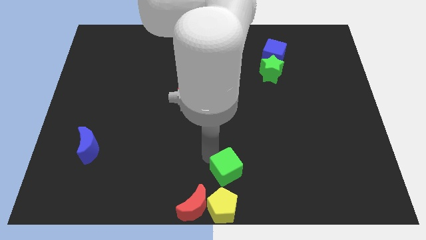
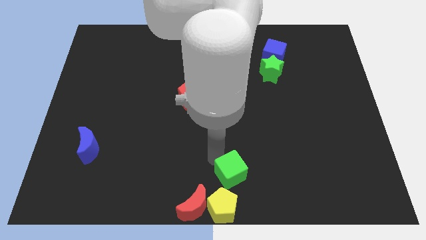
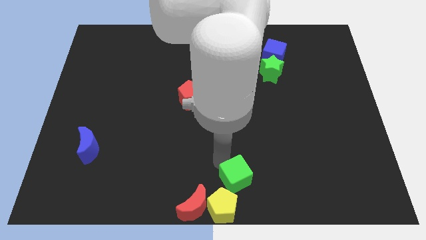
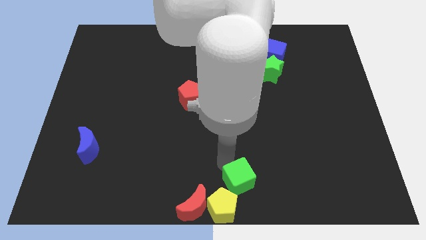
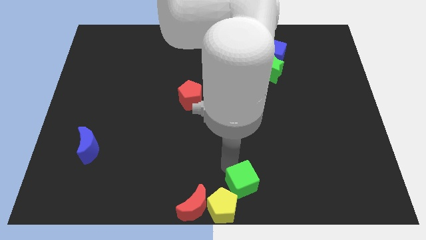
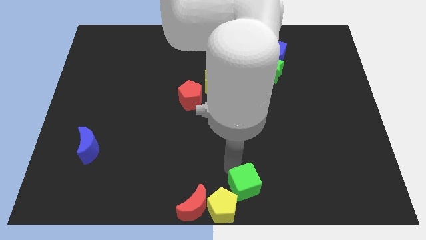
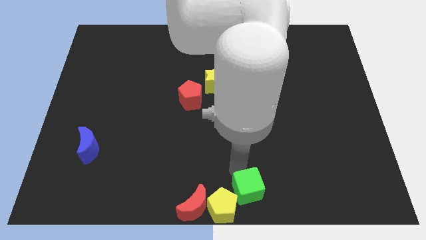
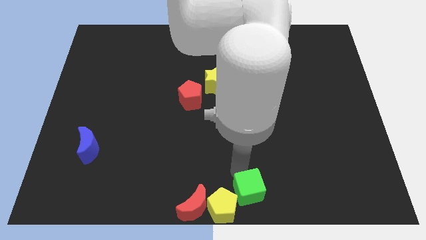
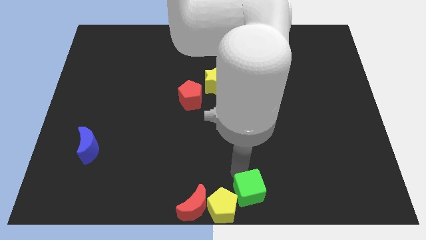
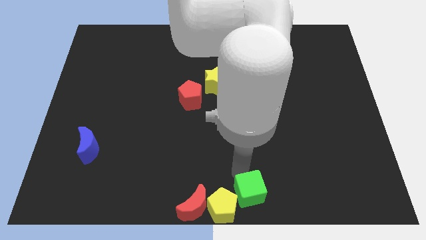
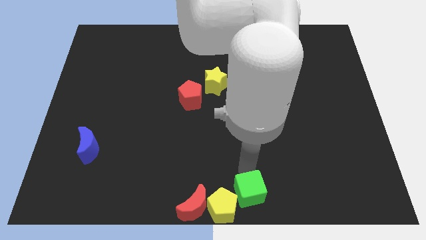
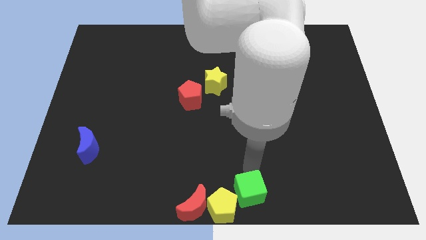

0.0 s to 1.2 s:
place the green cube diagonally top right to the yellow pentagon

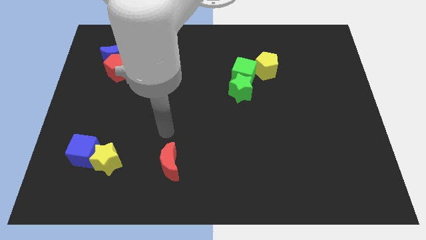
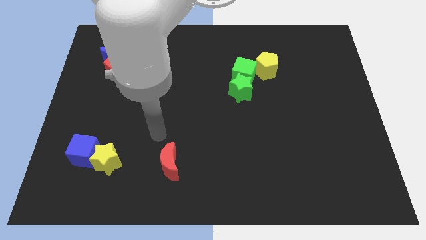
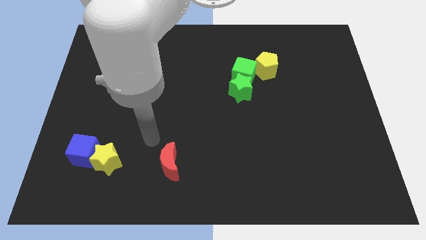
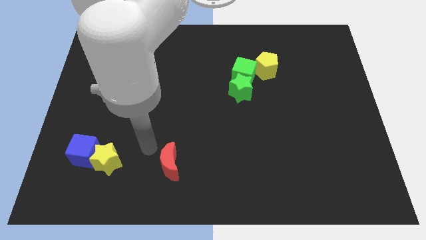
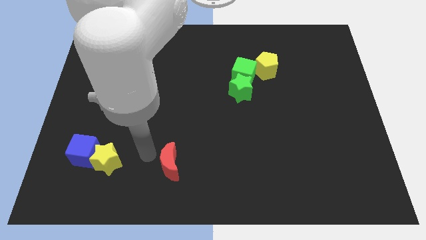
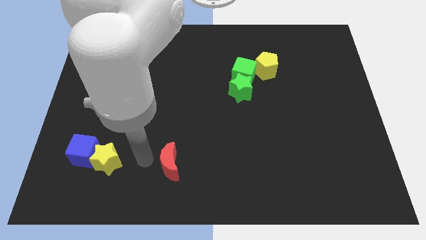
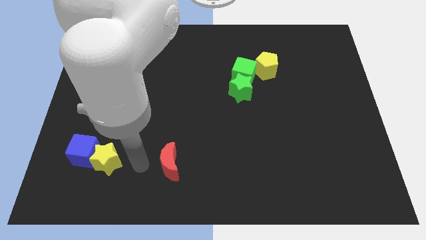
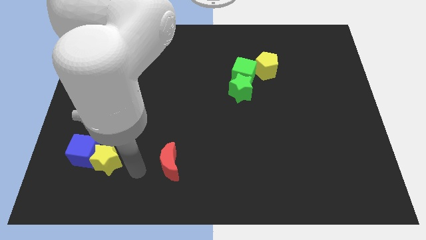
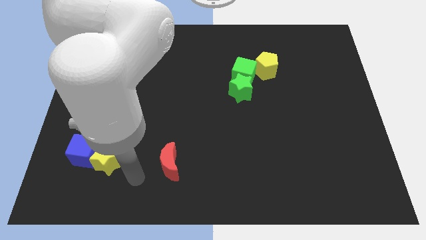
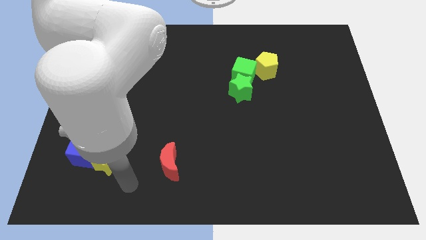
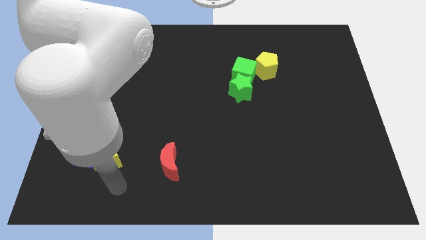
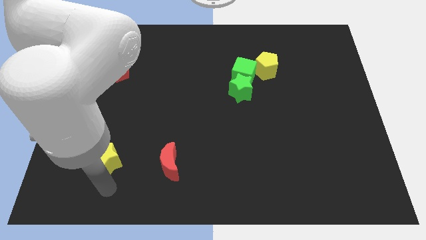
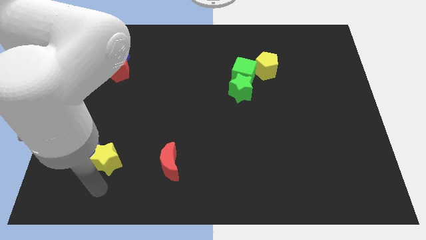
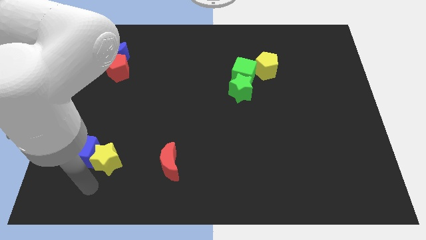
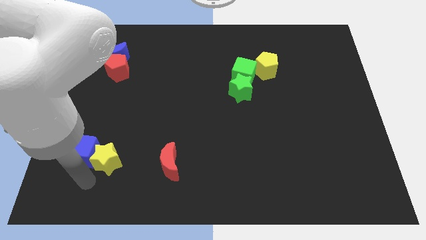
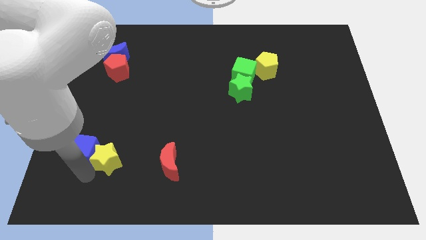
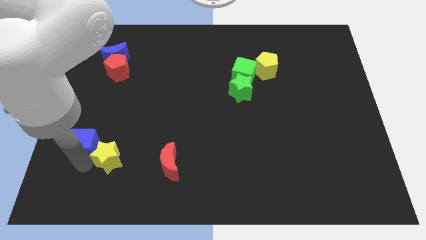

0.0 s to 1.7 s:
move the arm to the bottom of the blue cube

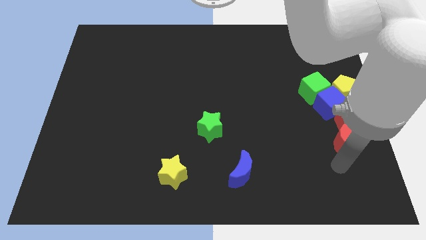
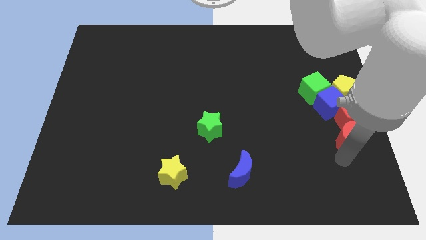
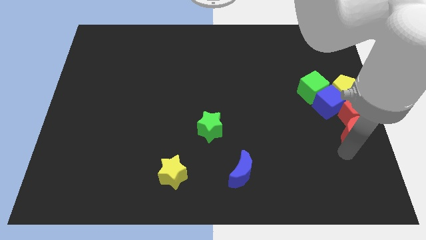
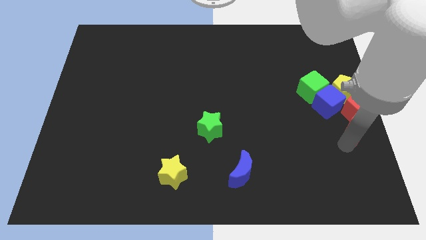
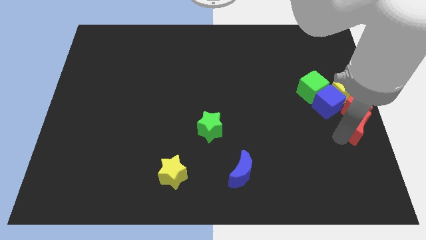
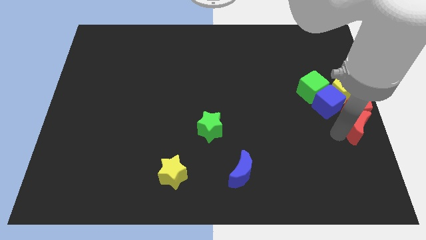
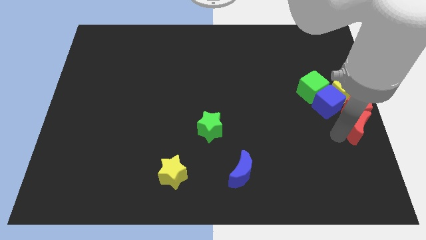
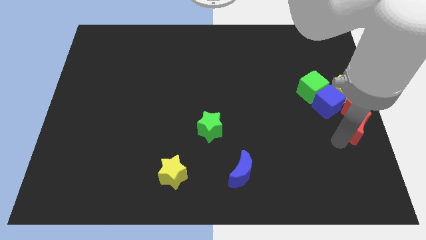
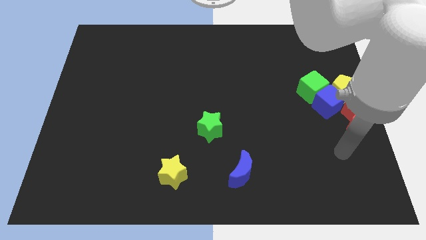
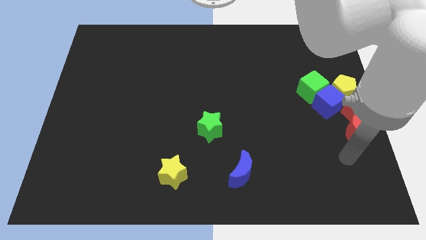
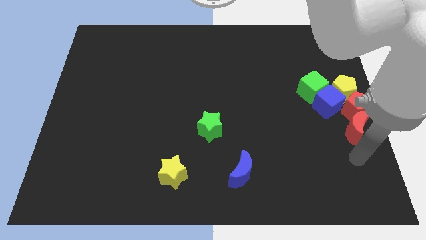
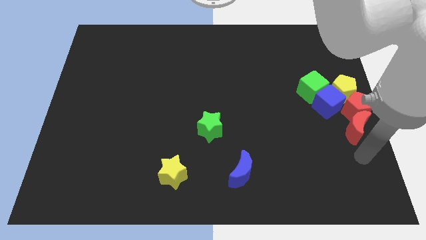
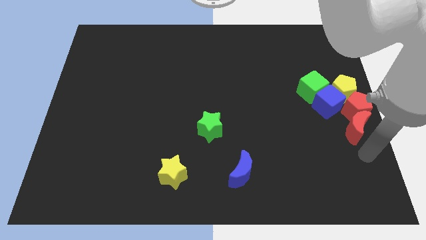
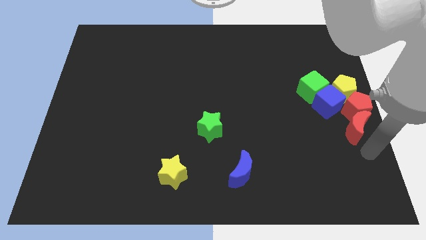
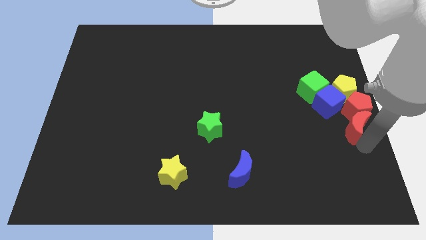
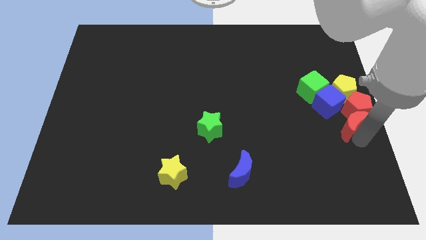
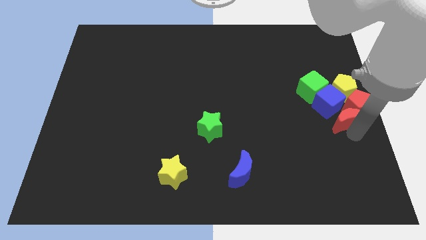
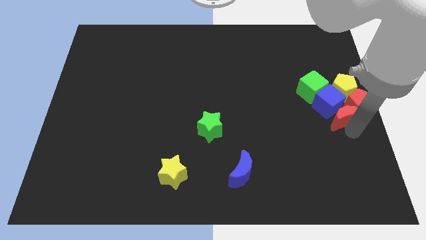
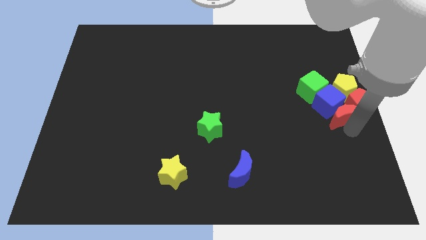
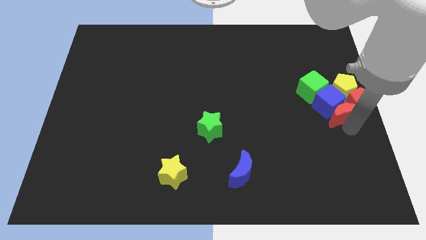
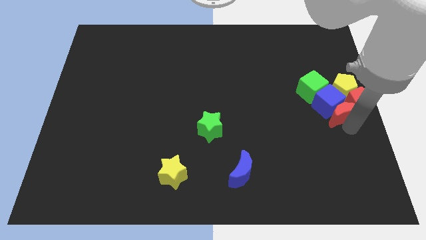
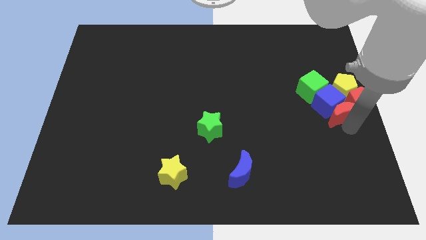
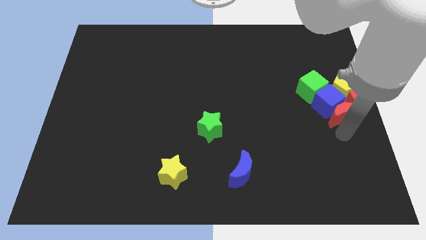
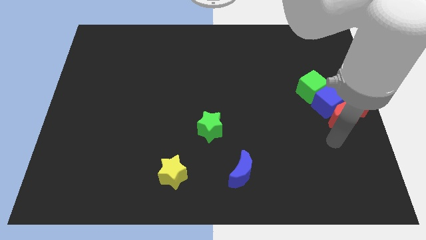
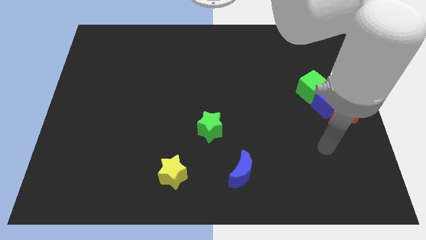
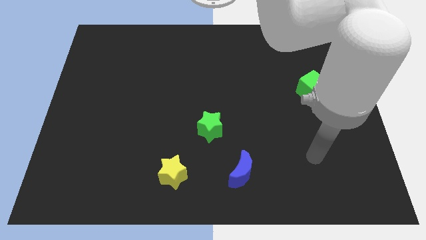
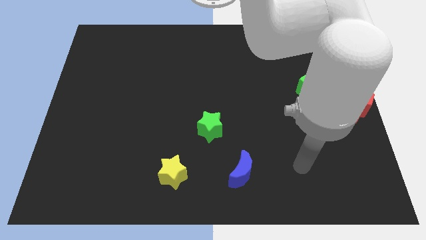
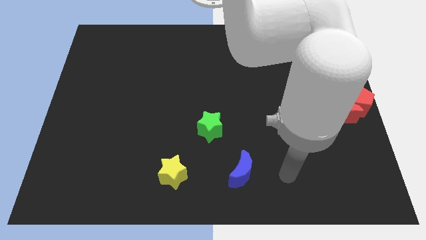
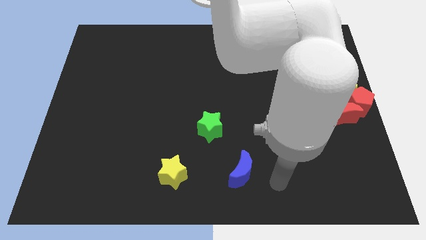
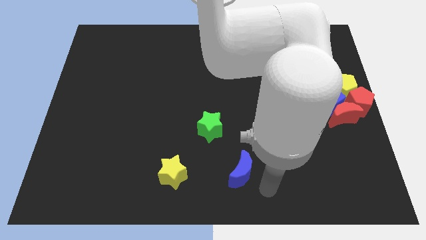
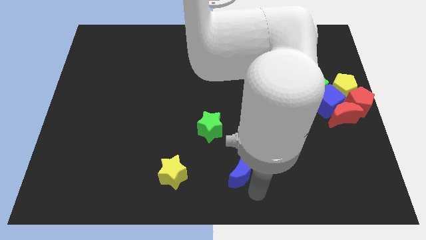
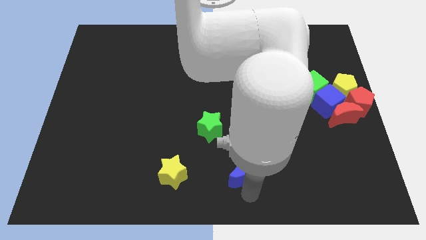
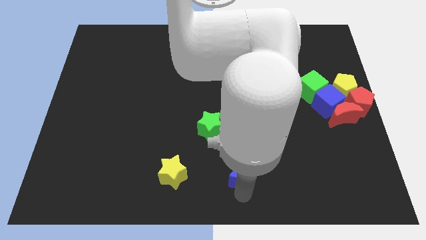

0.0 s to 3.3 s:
place your arm below blue crescent

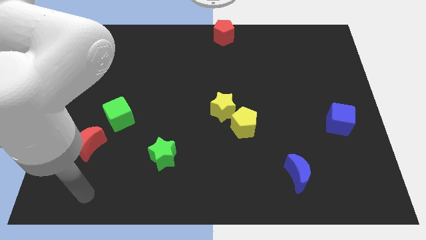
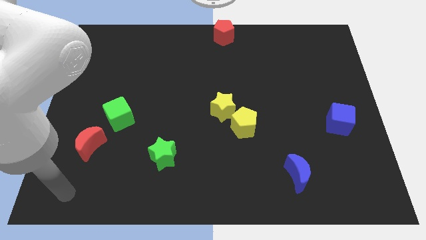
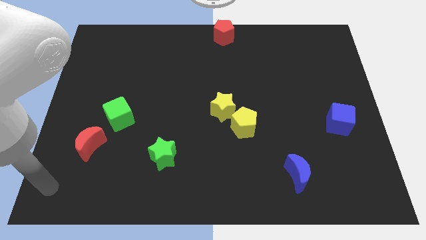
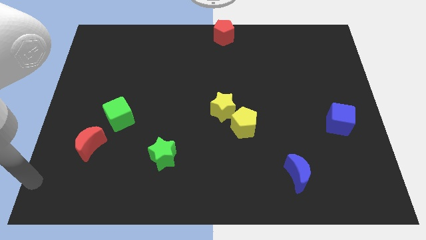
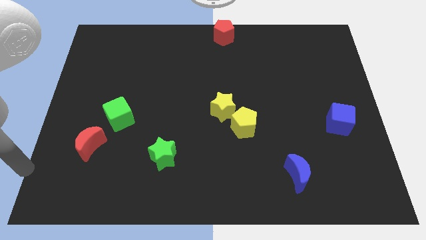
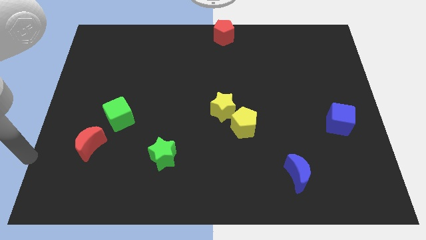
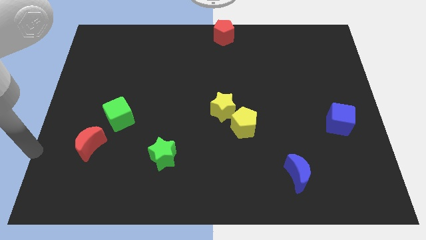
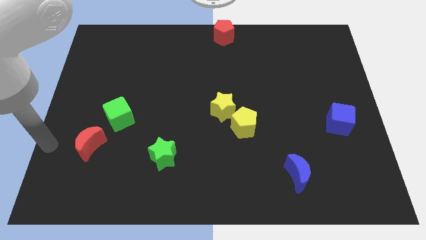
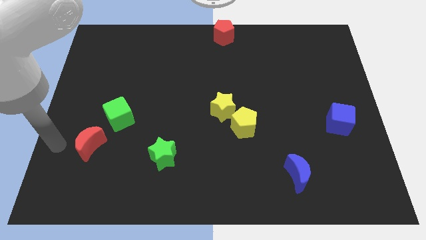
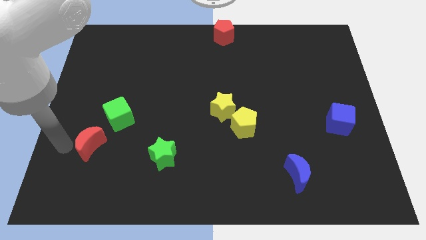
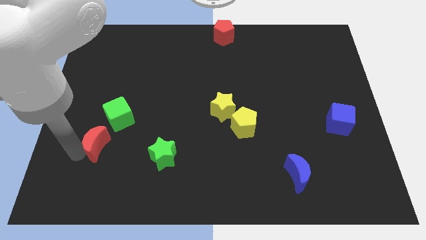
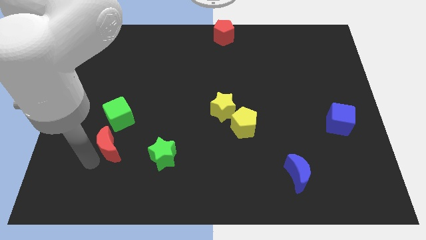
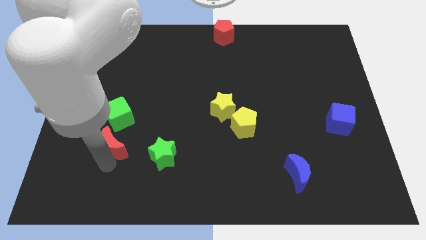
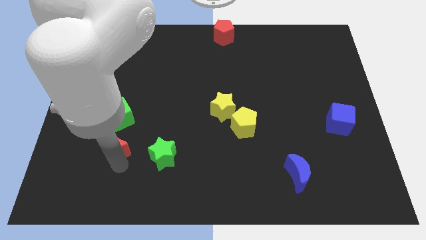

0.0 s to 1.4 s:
push the red crescent to the bottom of the green cube

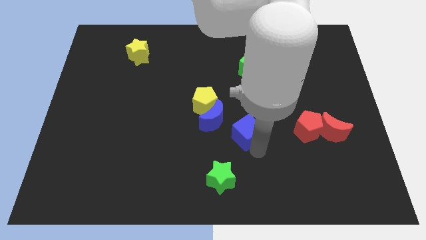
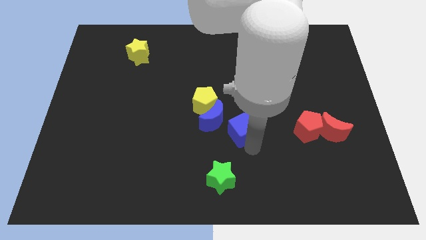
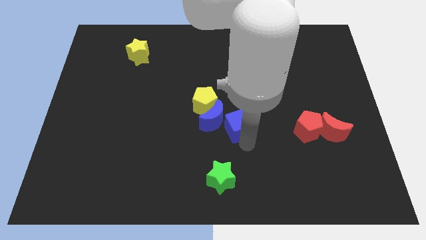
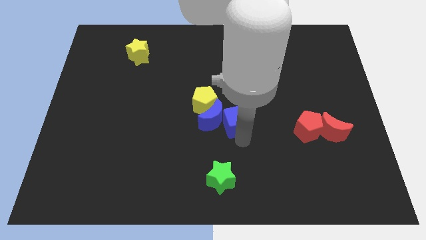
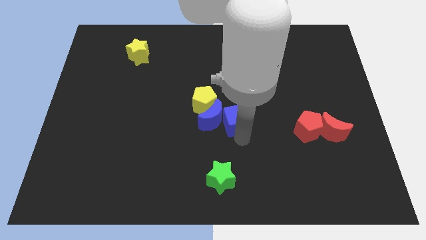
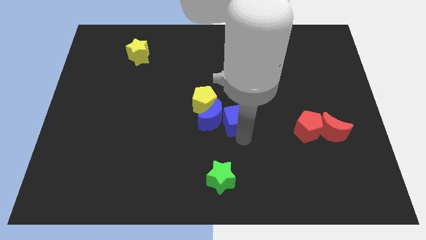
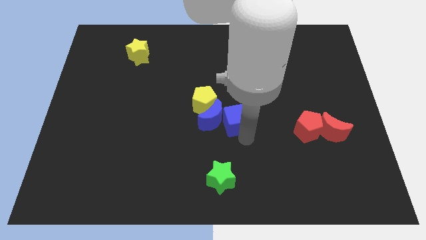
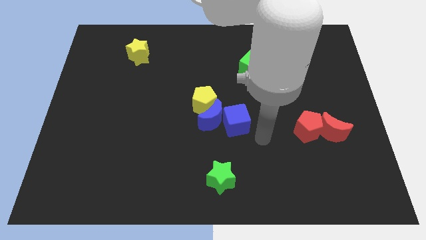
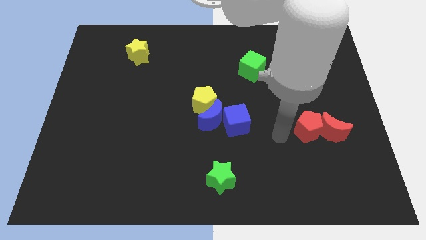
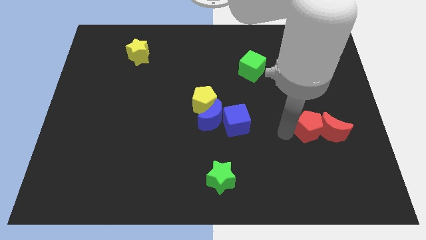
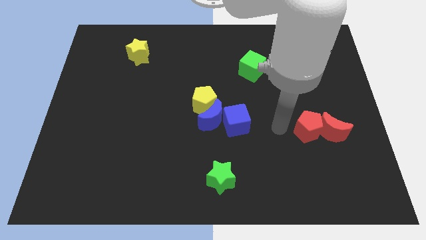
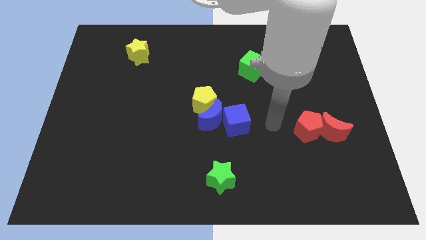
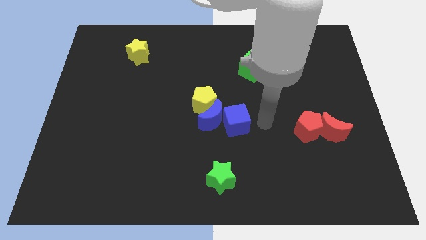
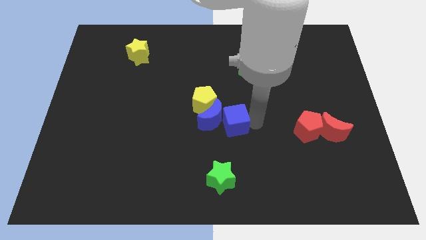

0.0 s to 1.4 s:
push the blue cube into the blue crescent from the right

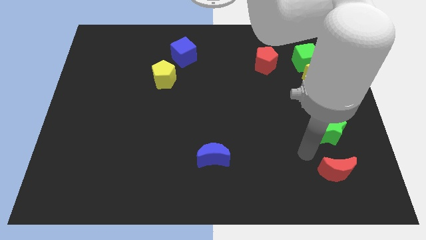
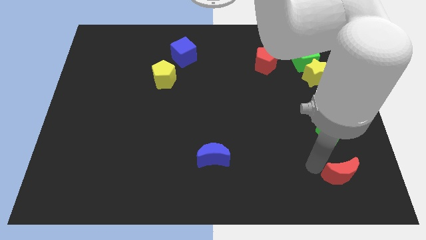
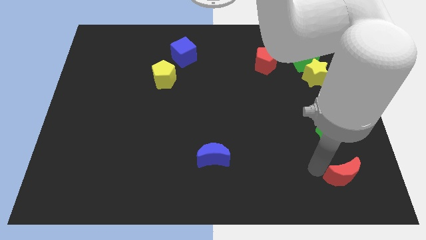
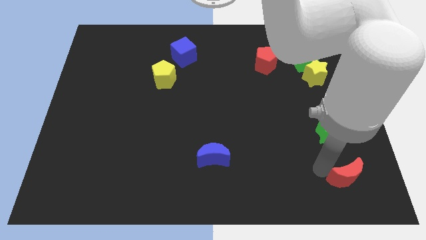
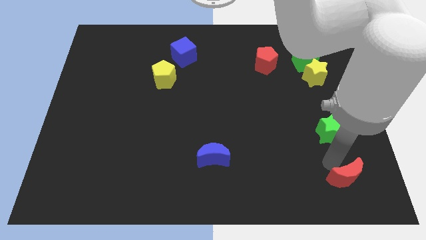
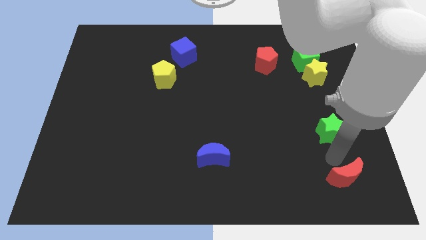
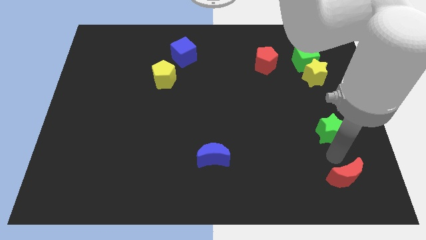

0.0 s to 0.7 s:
slightly push the red crescent towards the bottom of the board
